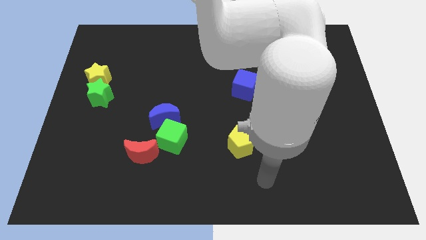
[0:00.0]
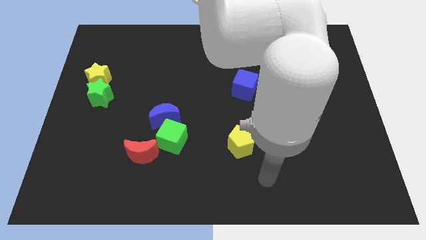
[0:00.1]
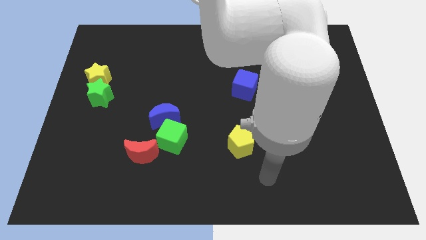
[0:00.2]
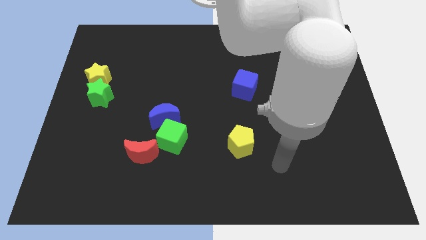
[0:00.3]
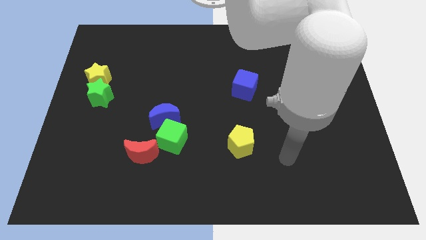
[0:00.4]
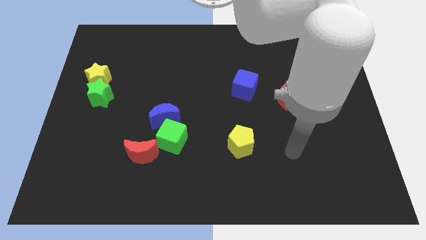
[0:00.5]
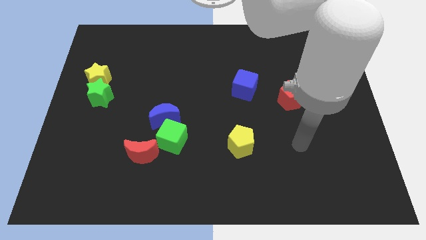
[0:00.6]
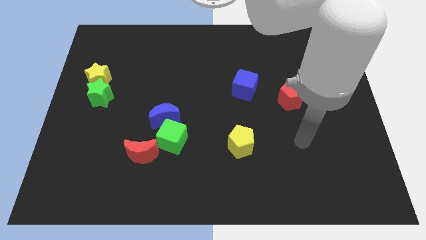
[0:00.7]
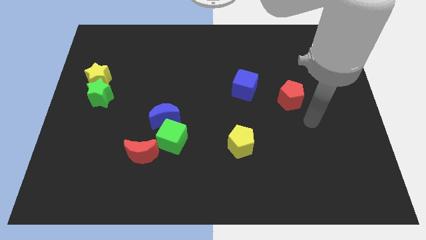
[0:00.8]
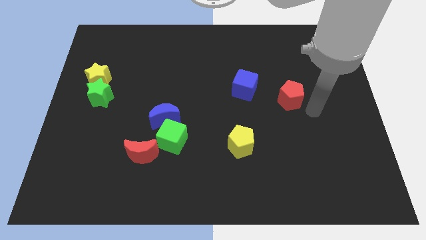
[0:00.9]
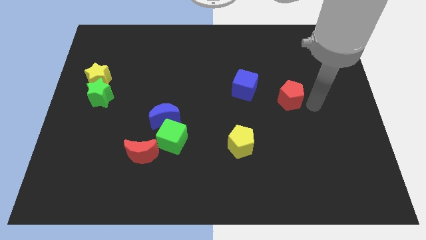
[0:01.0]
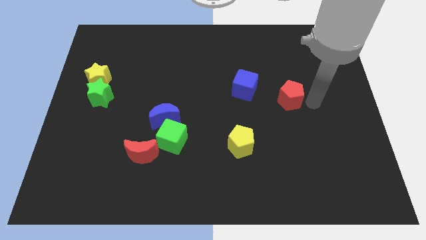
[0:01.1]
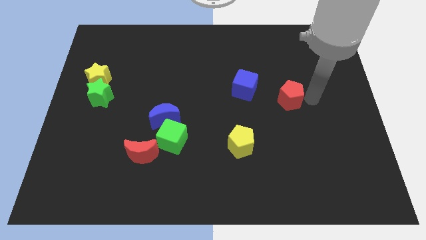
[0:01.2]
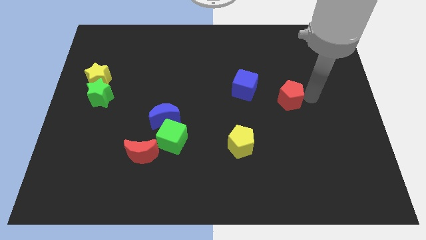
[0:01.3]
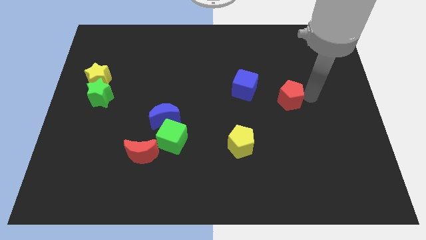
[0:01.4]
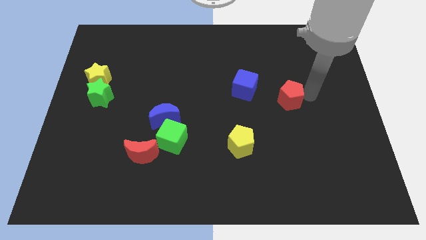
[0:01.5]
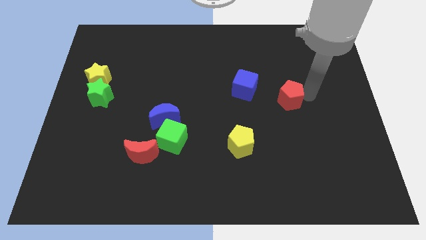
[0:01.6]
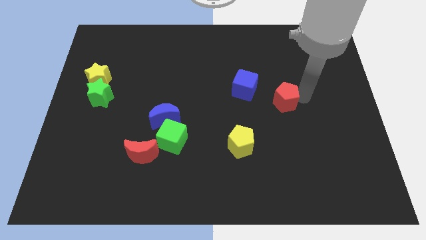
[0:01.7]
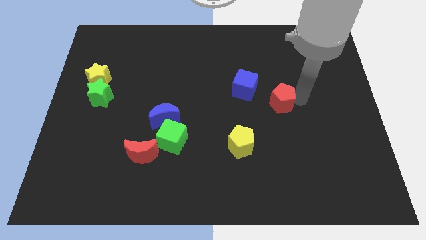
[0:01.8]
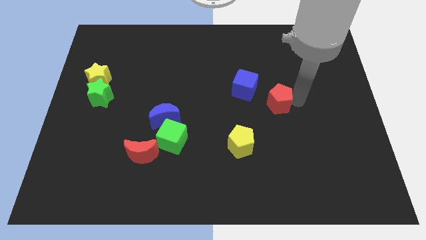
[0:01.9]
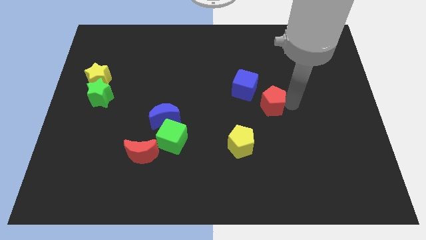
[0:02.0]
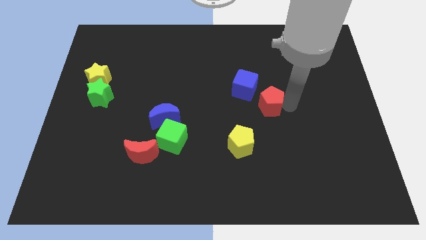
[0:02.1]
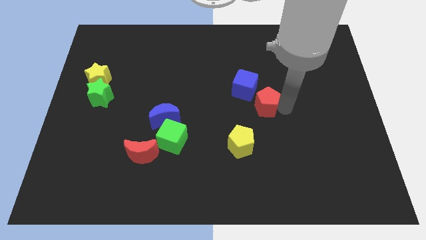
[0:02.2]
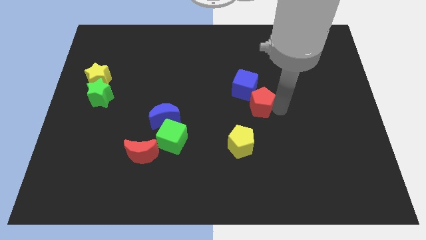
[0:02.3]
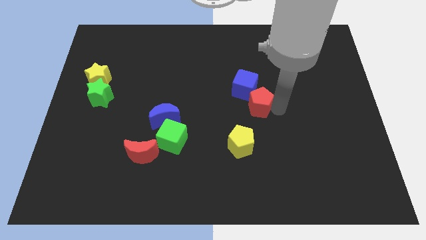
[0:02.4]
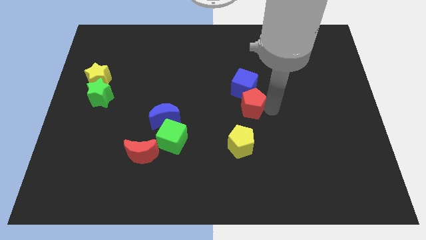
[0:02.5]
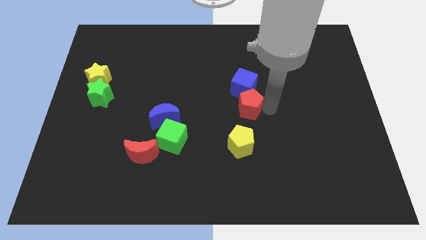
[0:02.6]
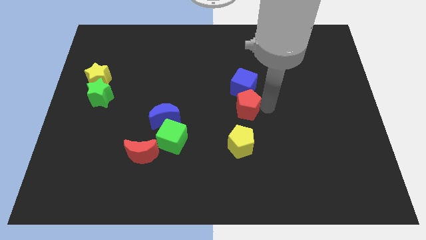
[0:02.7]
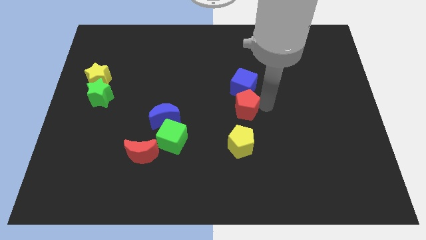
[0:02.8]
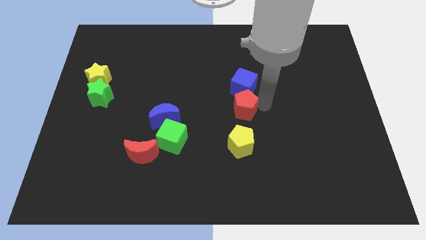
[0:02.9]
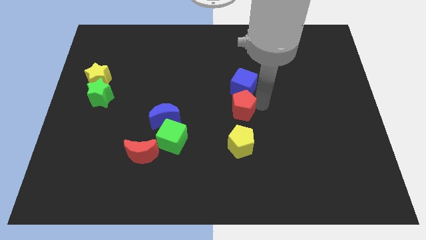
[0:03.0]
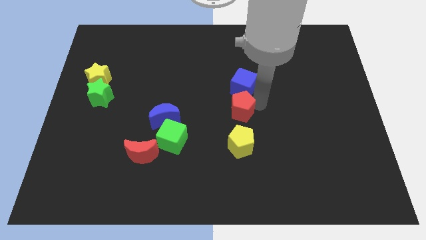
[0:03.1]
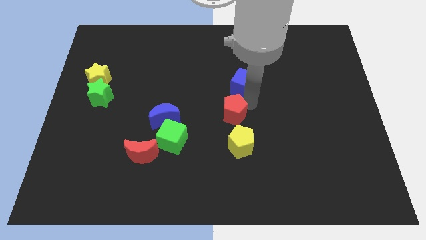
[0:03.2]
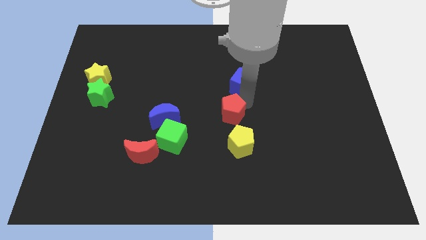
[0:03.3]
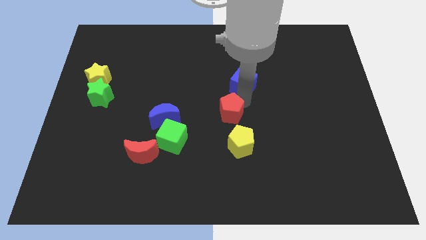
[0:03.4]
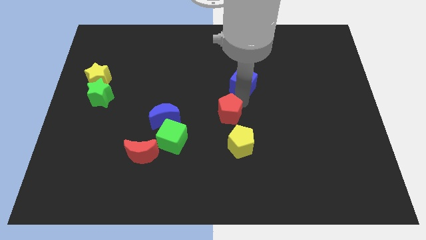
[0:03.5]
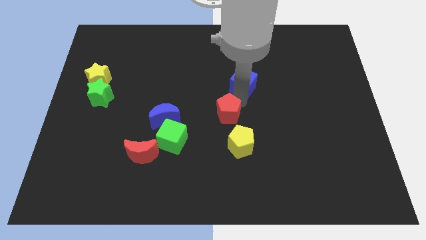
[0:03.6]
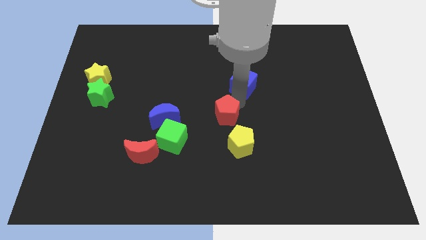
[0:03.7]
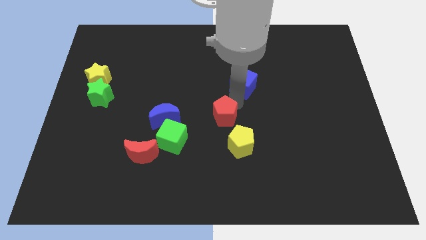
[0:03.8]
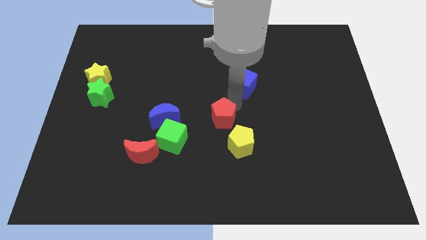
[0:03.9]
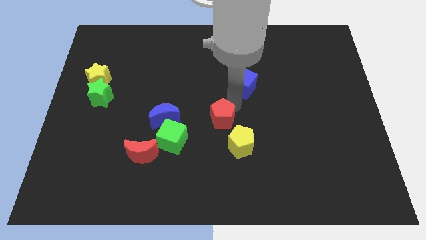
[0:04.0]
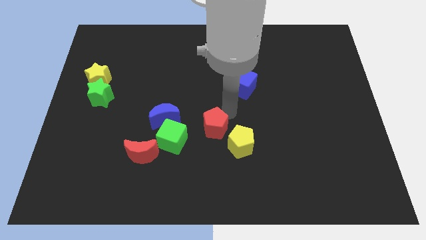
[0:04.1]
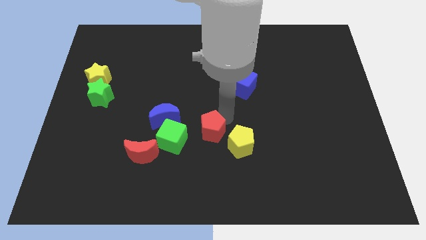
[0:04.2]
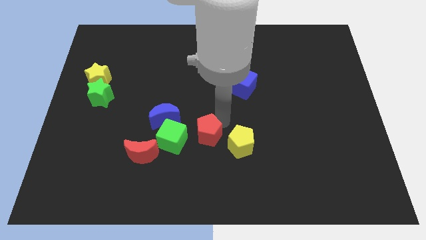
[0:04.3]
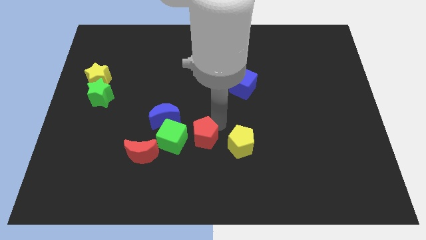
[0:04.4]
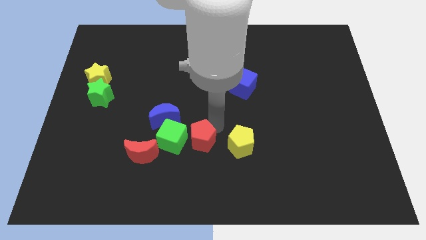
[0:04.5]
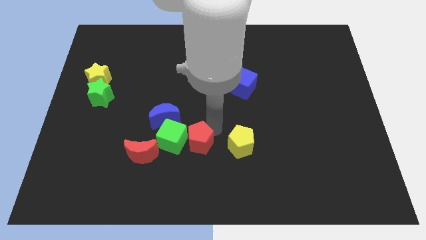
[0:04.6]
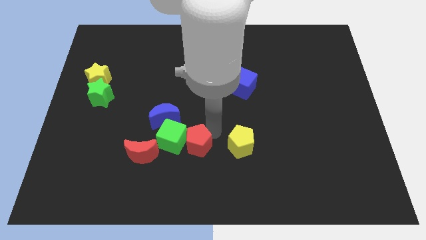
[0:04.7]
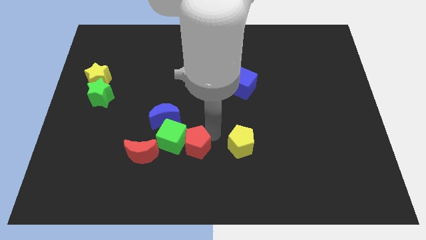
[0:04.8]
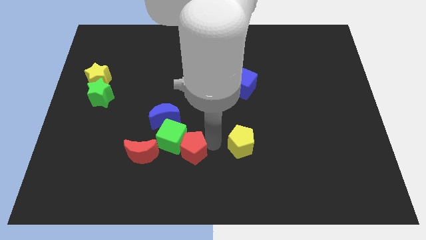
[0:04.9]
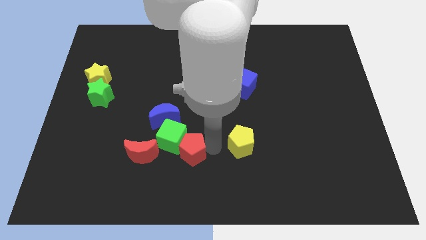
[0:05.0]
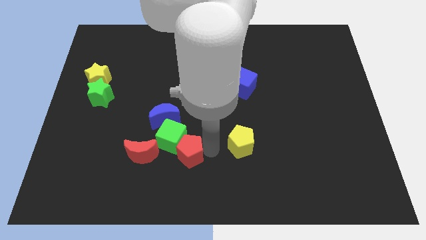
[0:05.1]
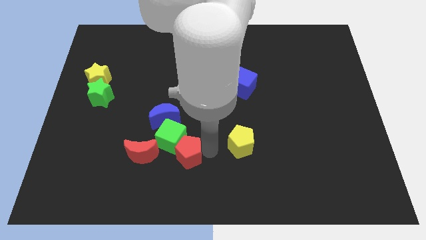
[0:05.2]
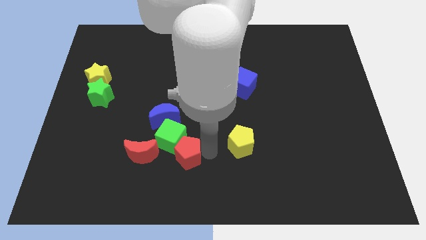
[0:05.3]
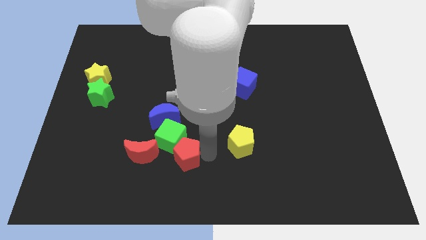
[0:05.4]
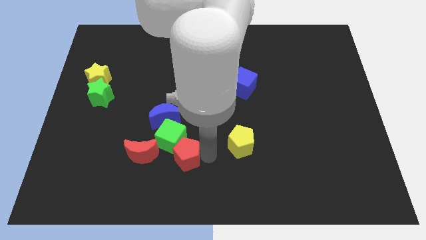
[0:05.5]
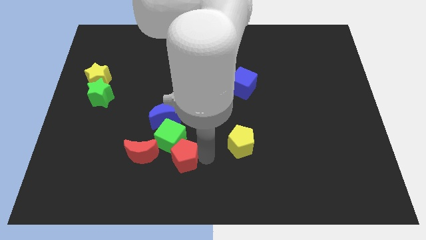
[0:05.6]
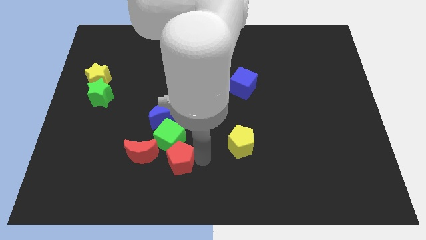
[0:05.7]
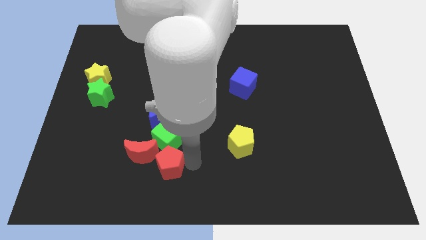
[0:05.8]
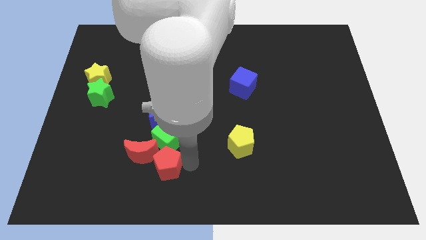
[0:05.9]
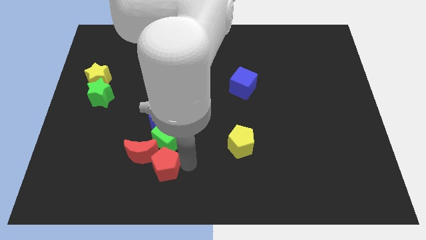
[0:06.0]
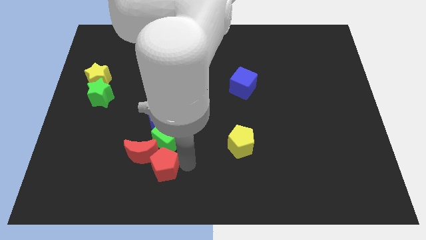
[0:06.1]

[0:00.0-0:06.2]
push the red pentagon to the red moon

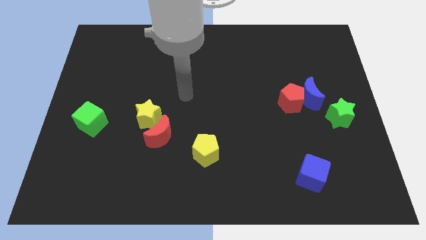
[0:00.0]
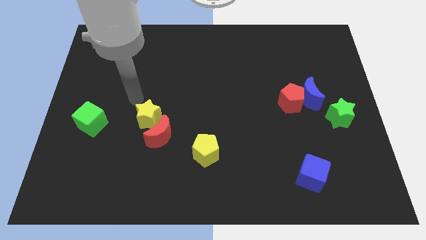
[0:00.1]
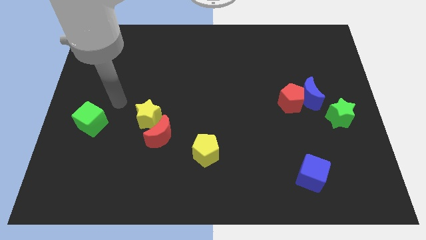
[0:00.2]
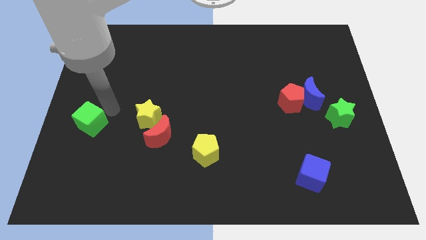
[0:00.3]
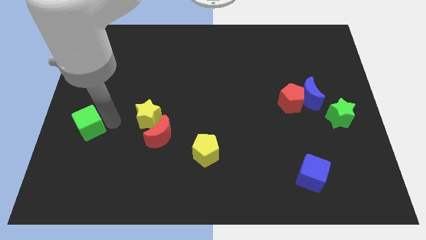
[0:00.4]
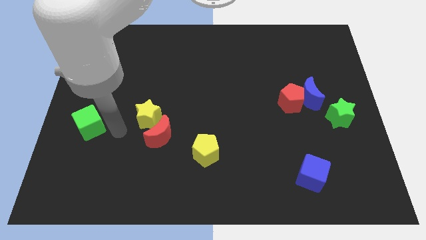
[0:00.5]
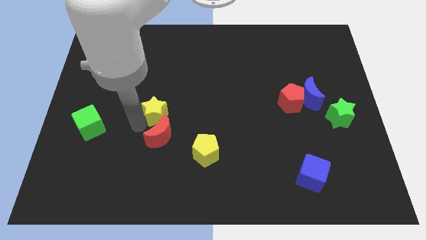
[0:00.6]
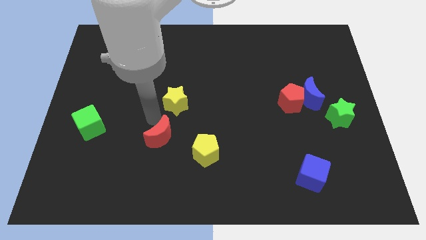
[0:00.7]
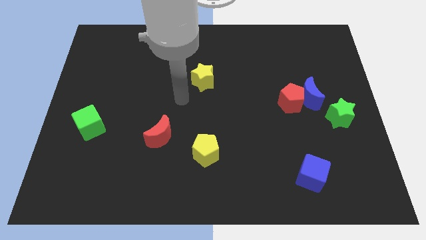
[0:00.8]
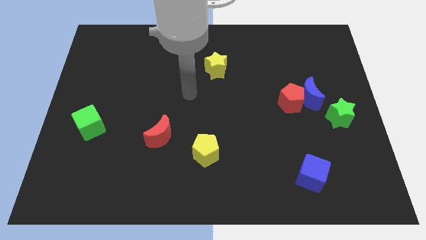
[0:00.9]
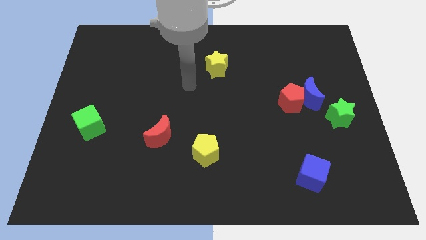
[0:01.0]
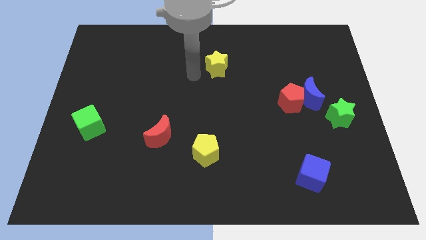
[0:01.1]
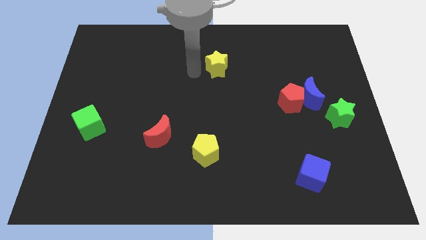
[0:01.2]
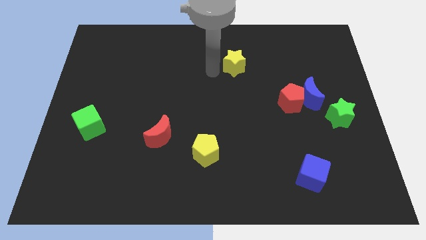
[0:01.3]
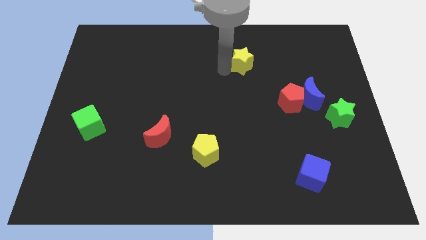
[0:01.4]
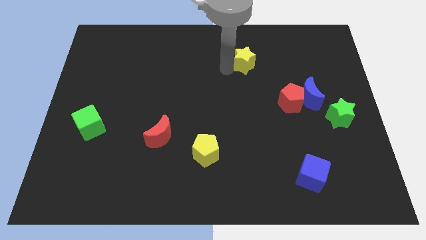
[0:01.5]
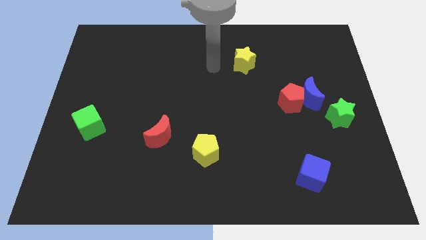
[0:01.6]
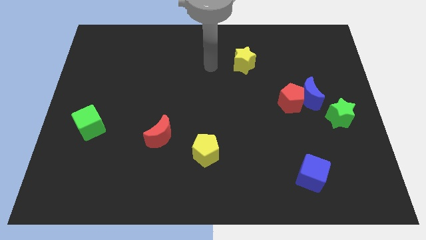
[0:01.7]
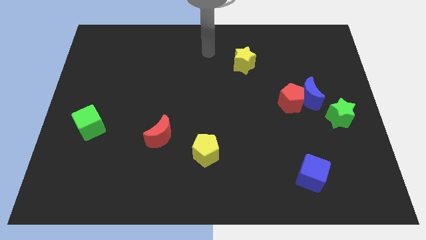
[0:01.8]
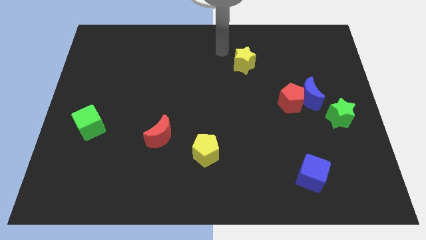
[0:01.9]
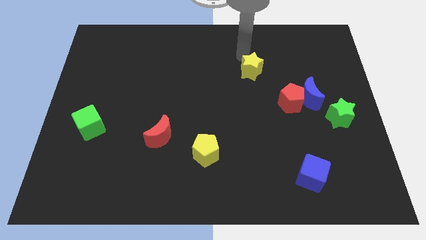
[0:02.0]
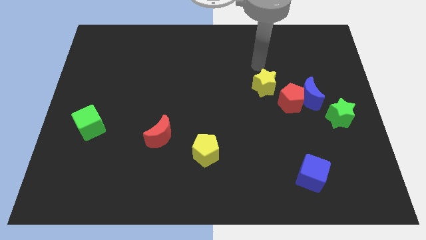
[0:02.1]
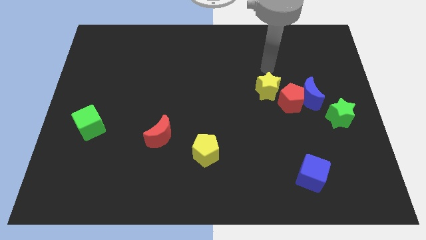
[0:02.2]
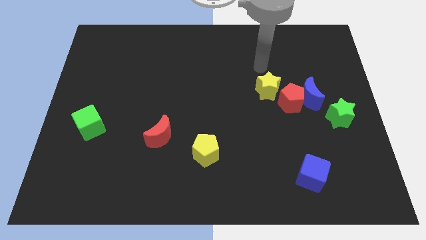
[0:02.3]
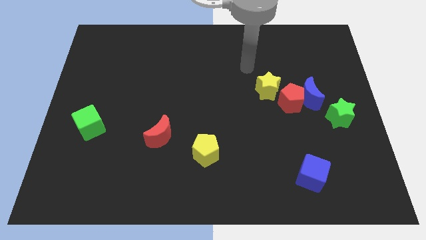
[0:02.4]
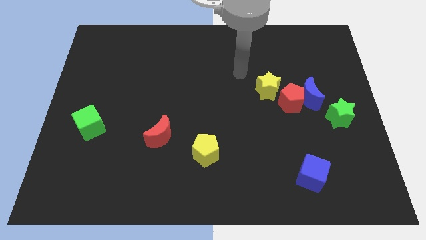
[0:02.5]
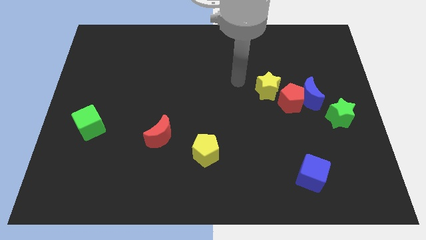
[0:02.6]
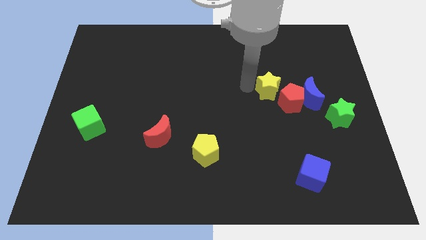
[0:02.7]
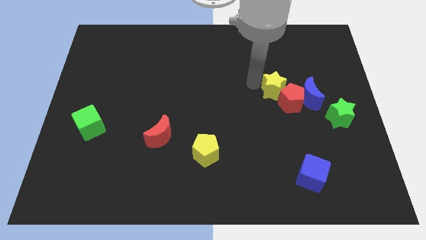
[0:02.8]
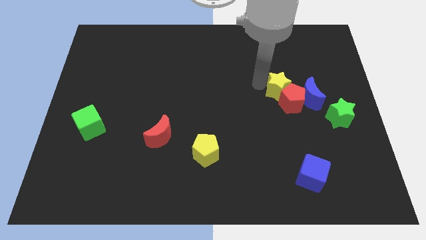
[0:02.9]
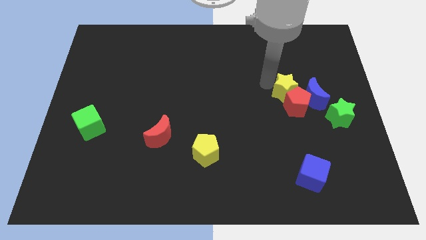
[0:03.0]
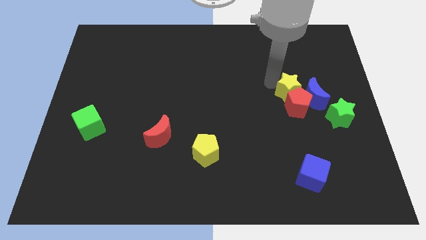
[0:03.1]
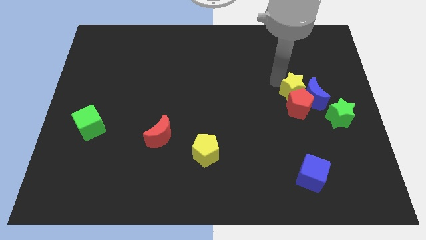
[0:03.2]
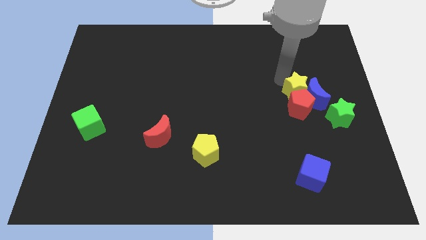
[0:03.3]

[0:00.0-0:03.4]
push the yellow star next to the blue moon
